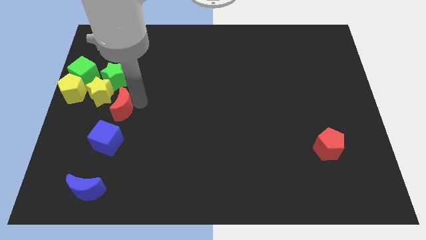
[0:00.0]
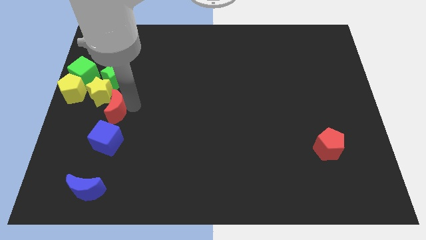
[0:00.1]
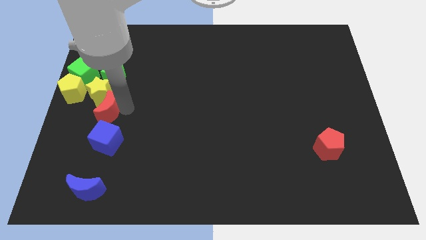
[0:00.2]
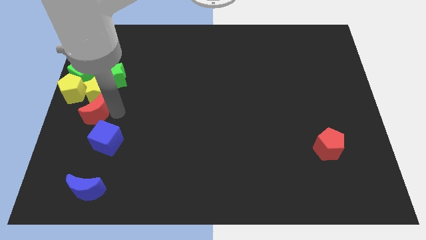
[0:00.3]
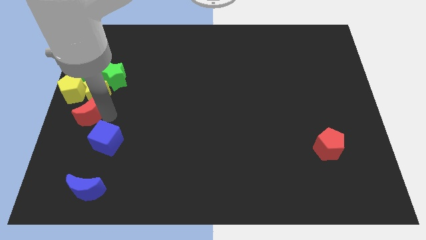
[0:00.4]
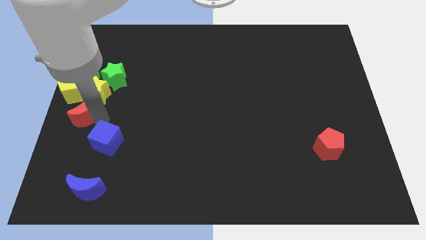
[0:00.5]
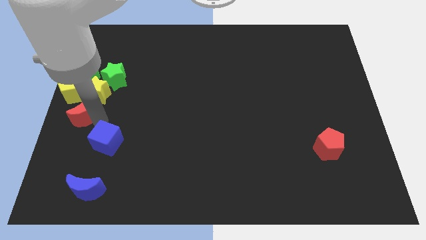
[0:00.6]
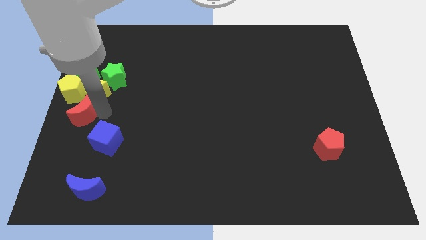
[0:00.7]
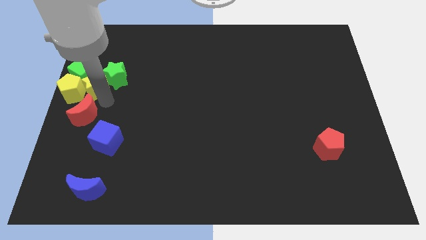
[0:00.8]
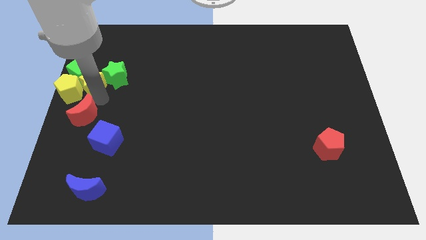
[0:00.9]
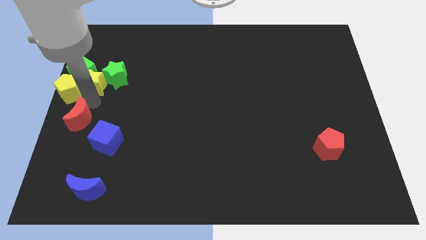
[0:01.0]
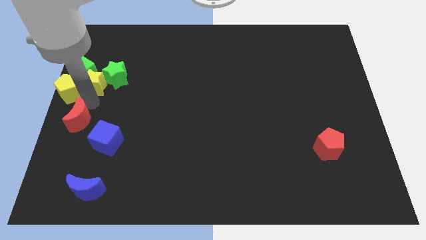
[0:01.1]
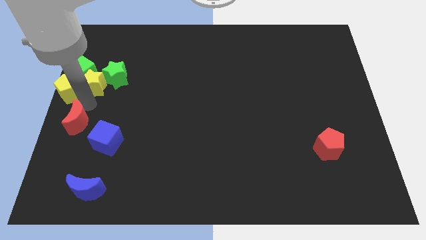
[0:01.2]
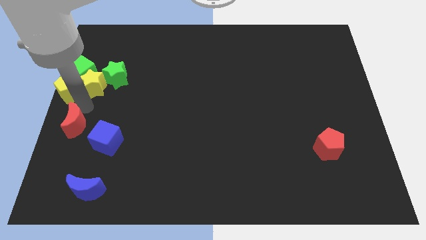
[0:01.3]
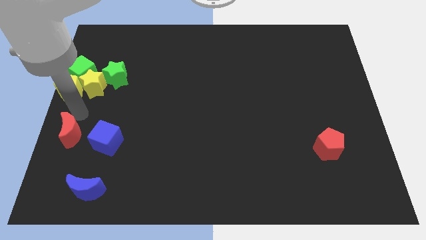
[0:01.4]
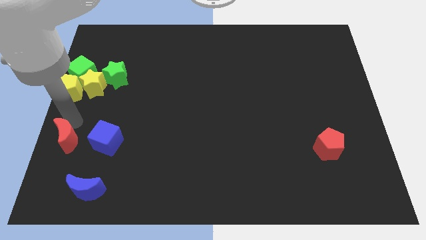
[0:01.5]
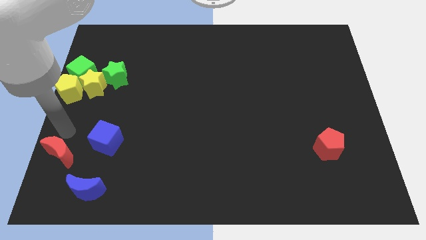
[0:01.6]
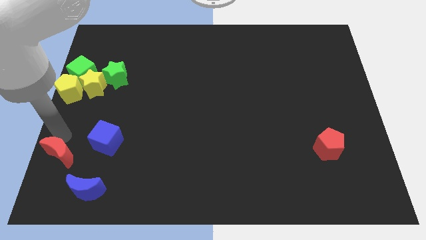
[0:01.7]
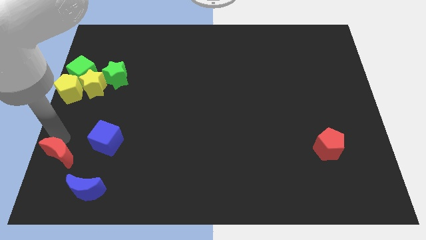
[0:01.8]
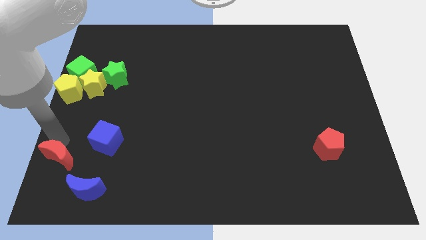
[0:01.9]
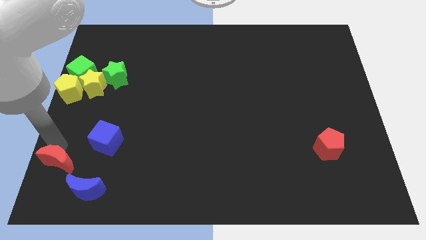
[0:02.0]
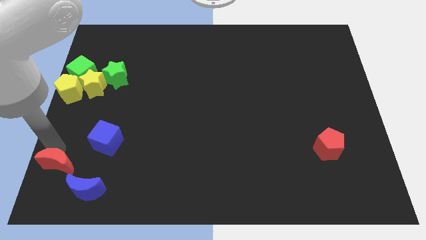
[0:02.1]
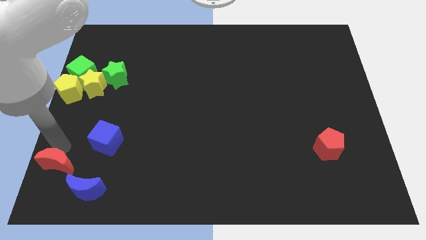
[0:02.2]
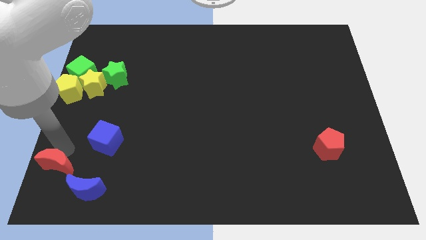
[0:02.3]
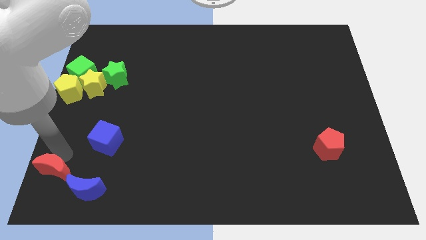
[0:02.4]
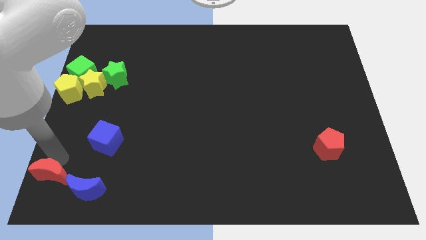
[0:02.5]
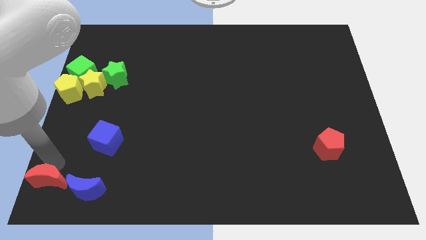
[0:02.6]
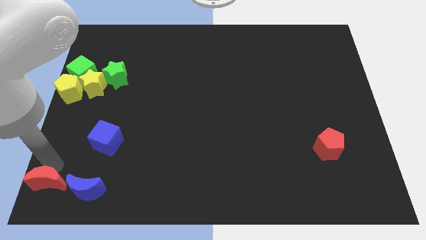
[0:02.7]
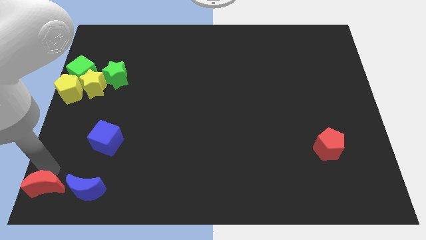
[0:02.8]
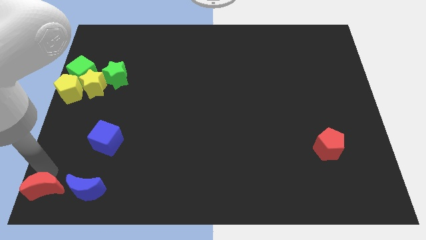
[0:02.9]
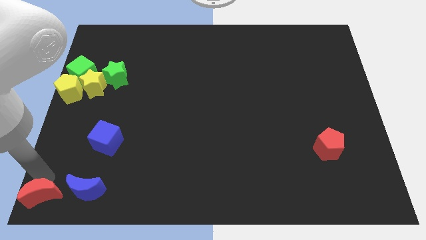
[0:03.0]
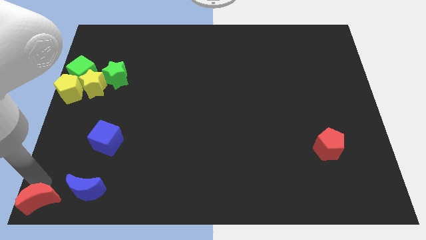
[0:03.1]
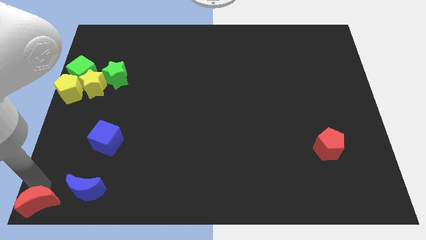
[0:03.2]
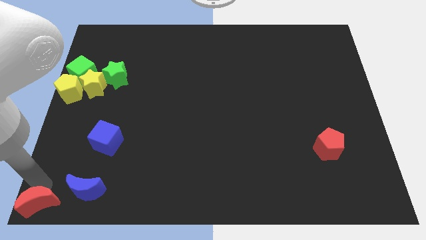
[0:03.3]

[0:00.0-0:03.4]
move the red crescent to the bottom left corner

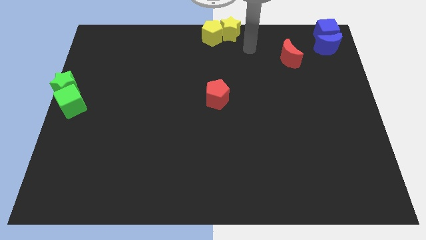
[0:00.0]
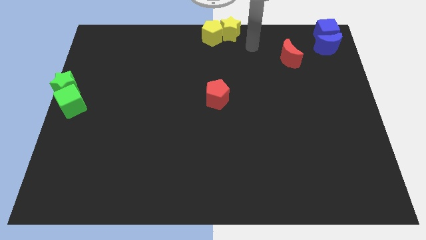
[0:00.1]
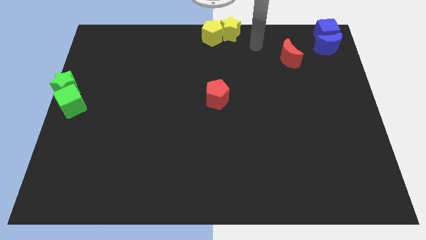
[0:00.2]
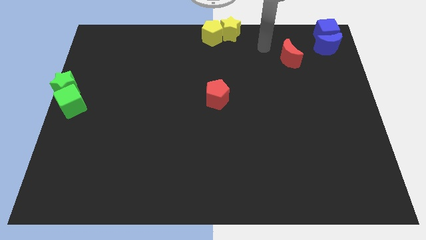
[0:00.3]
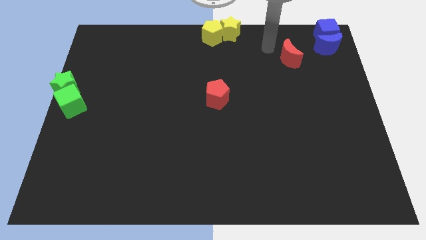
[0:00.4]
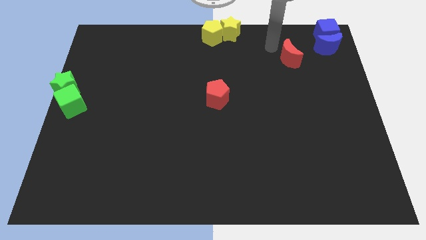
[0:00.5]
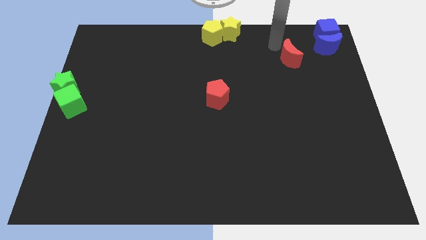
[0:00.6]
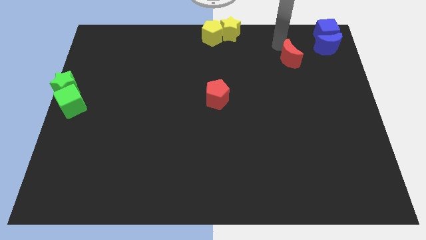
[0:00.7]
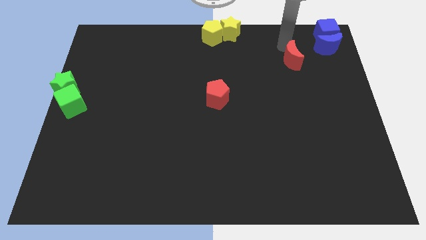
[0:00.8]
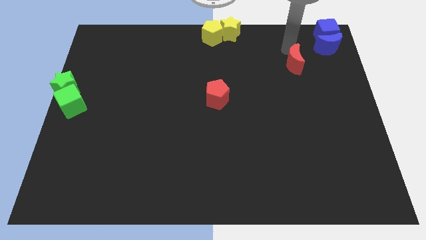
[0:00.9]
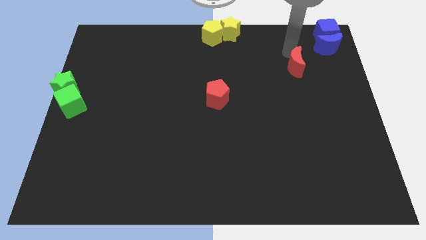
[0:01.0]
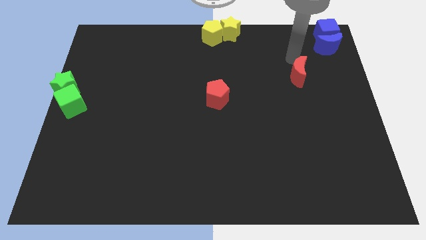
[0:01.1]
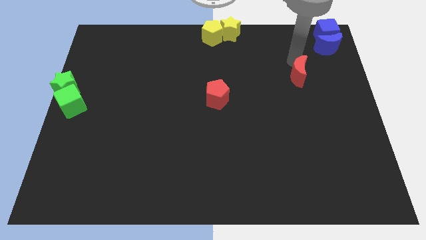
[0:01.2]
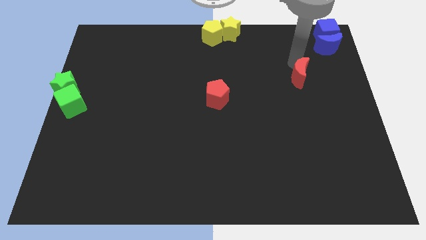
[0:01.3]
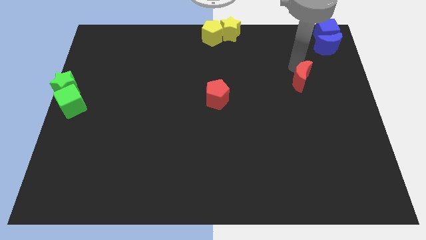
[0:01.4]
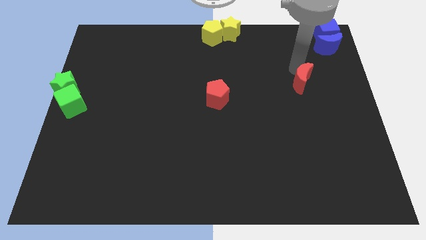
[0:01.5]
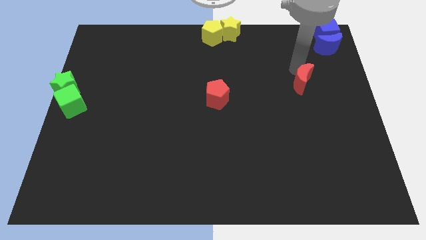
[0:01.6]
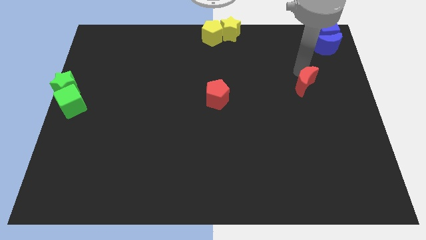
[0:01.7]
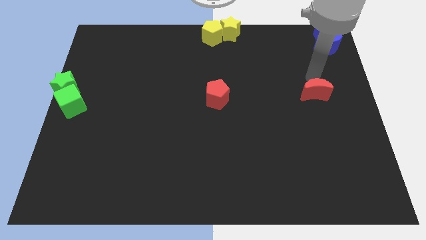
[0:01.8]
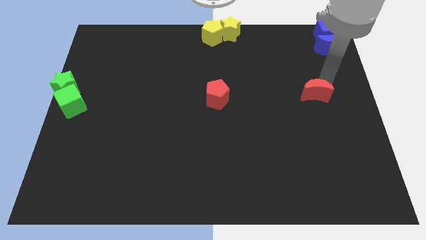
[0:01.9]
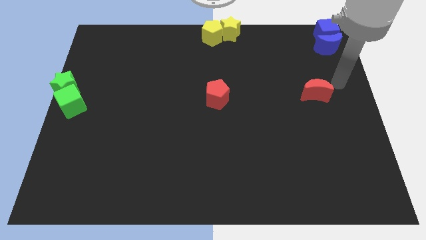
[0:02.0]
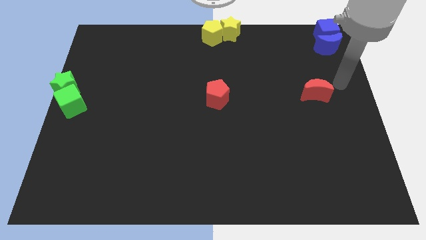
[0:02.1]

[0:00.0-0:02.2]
slightly move the red moon towards down

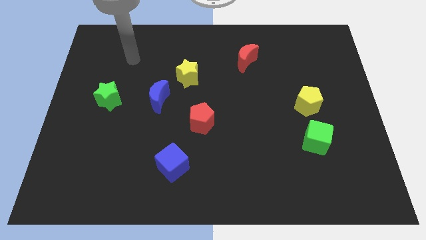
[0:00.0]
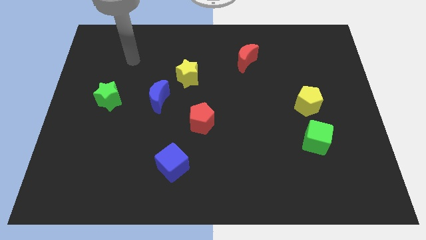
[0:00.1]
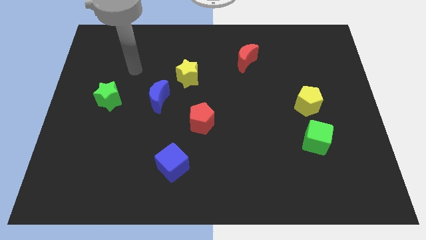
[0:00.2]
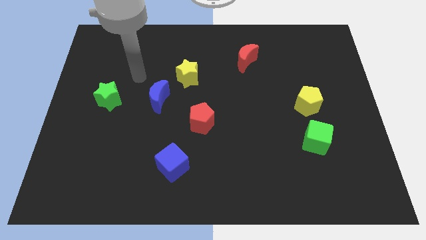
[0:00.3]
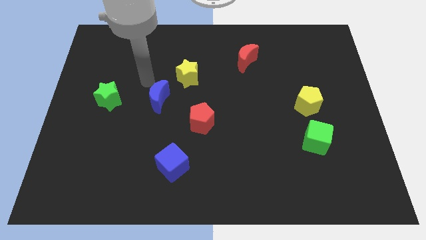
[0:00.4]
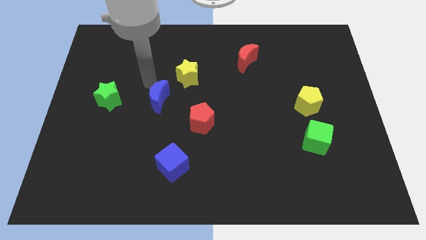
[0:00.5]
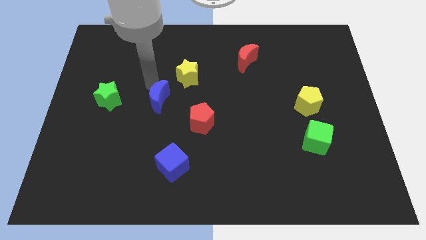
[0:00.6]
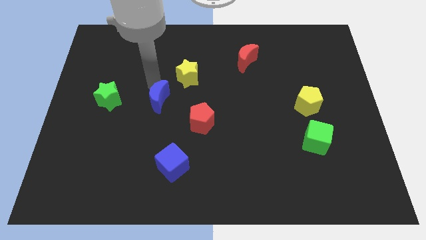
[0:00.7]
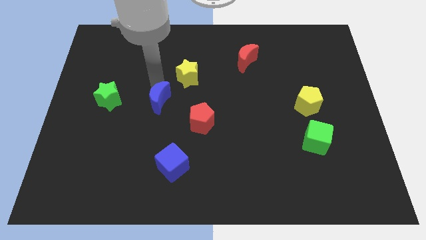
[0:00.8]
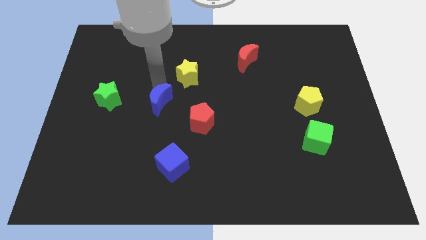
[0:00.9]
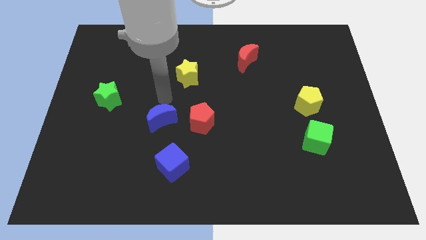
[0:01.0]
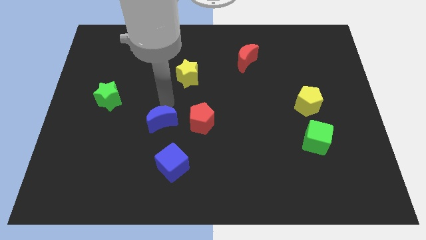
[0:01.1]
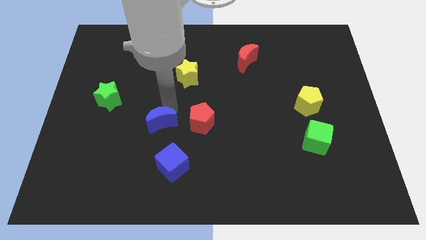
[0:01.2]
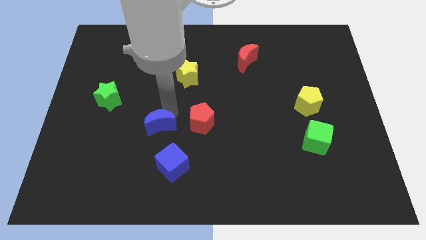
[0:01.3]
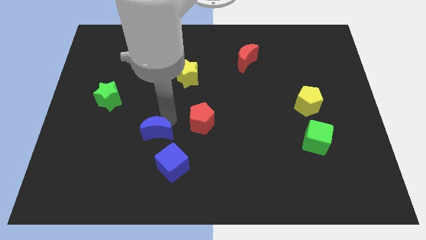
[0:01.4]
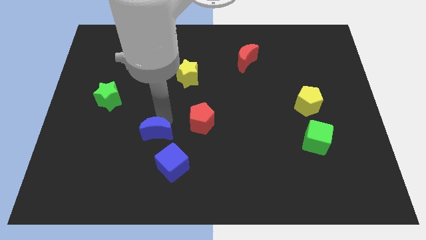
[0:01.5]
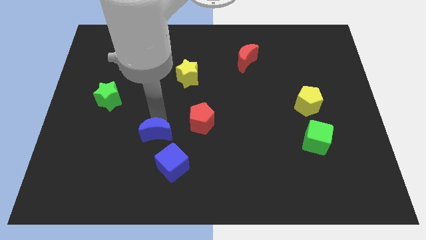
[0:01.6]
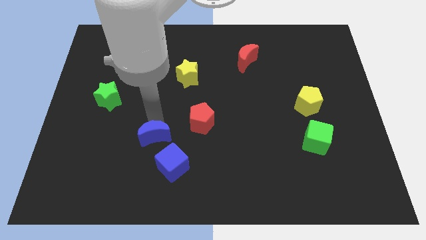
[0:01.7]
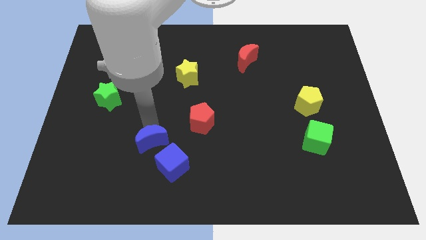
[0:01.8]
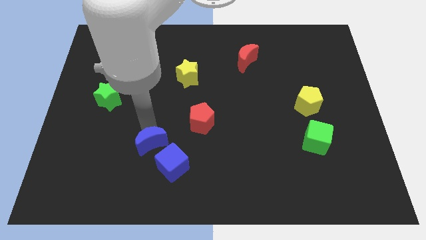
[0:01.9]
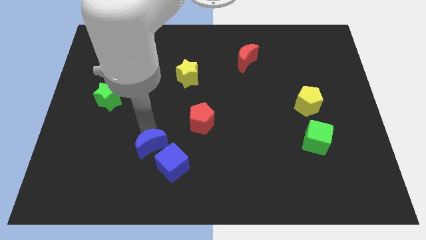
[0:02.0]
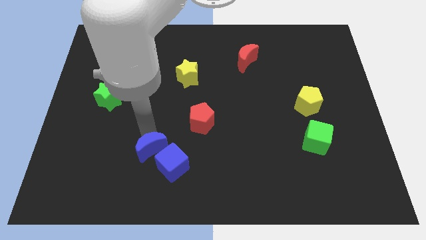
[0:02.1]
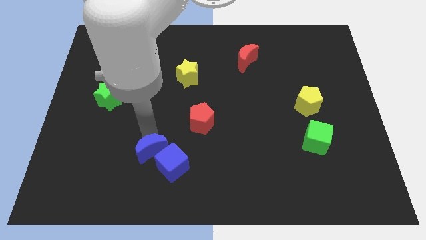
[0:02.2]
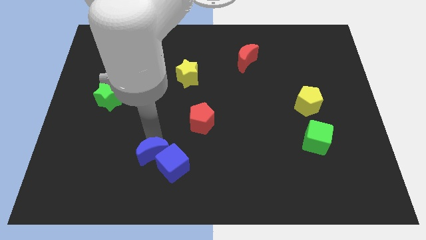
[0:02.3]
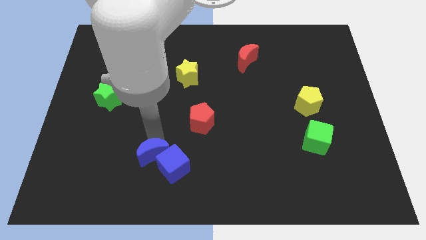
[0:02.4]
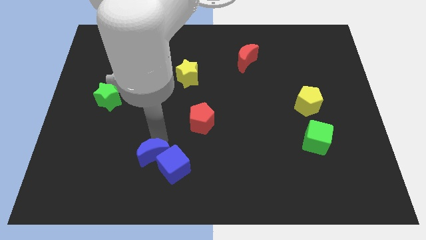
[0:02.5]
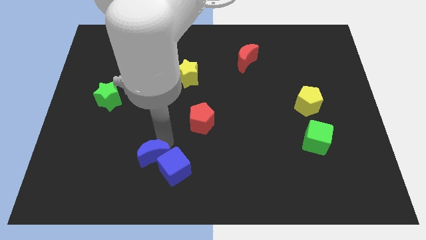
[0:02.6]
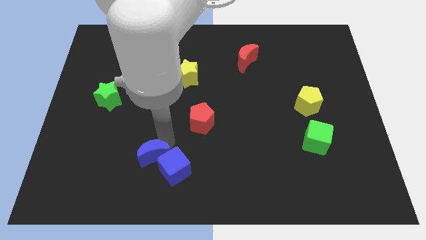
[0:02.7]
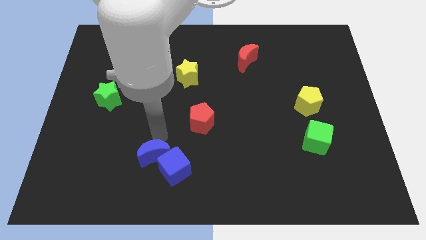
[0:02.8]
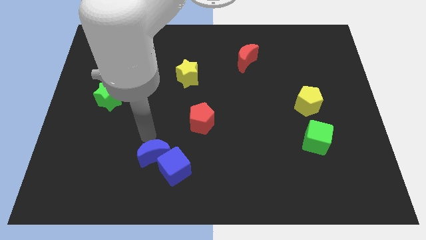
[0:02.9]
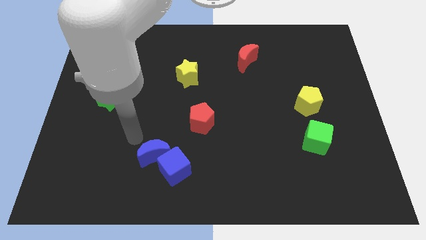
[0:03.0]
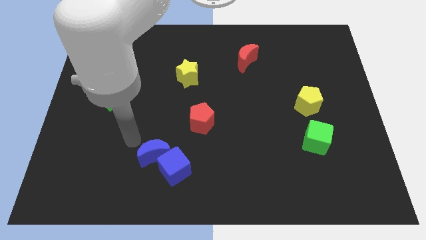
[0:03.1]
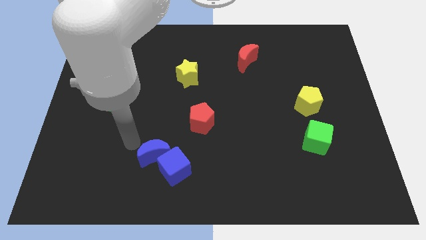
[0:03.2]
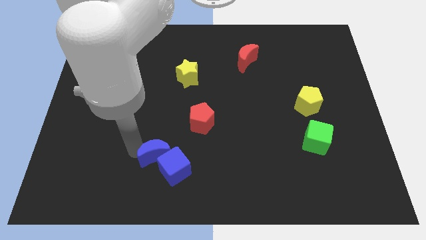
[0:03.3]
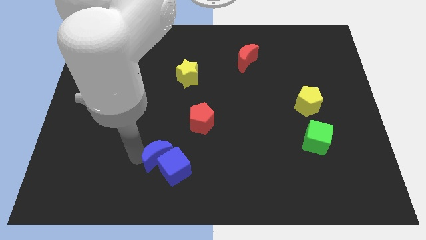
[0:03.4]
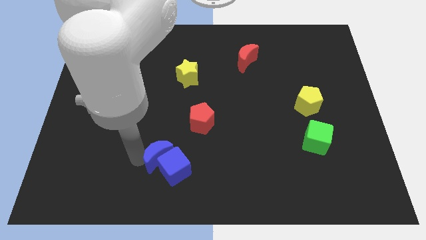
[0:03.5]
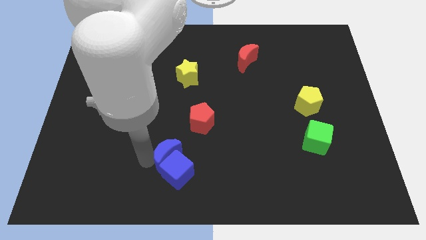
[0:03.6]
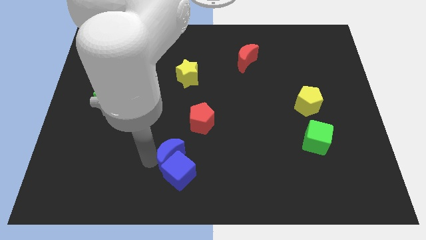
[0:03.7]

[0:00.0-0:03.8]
move the blue moon into blue cube
